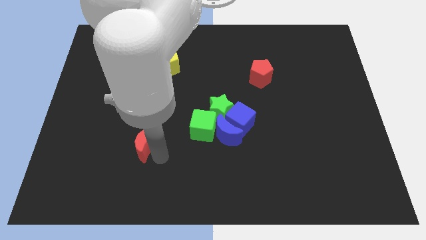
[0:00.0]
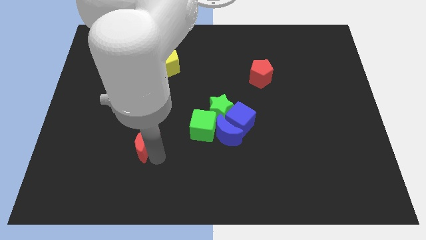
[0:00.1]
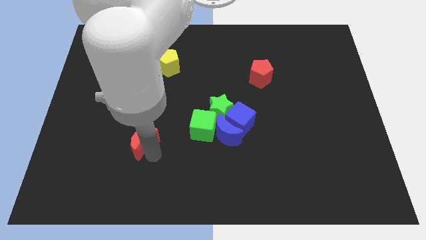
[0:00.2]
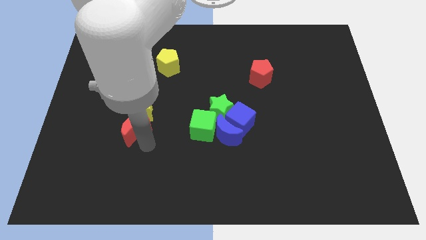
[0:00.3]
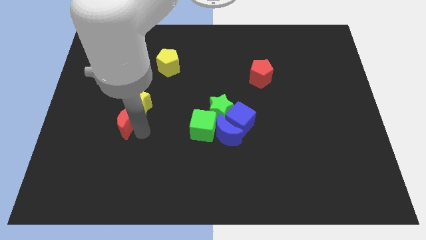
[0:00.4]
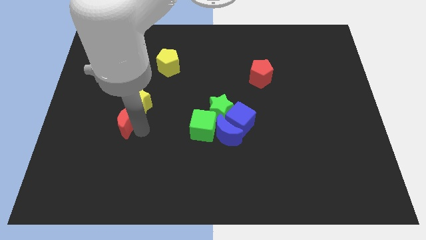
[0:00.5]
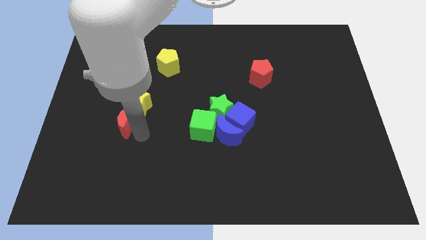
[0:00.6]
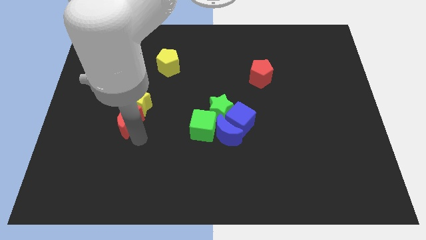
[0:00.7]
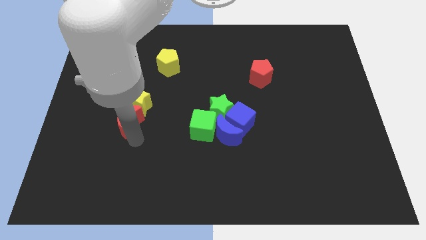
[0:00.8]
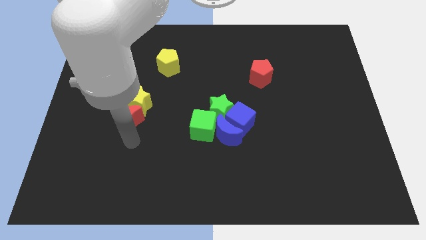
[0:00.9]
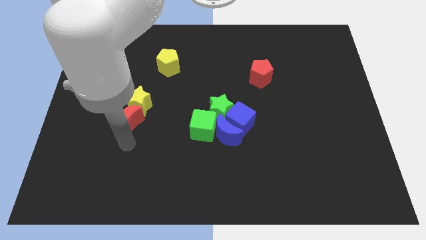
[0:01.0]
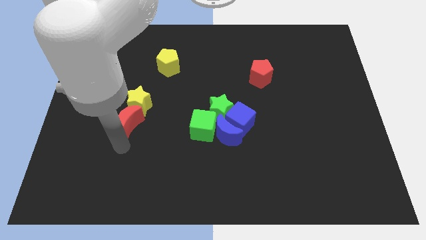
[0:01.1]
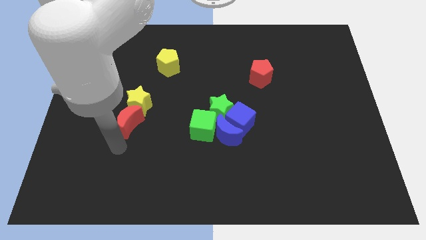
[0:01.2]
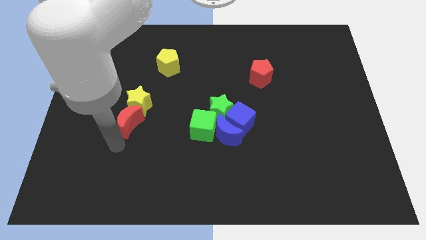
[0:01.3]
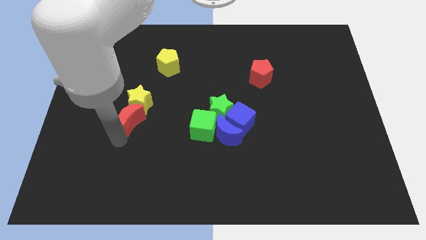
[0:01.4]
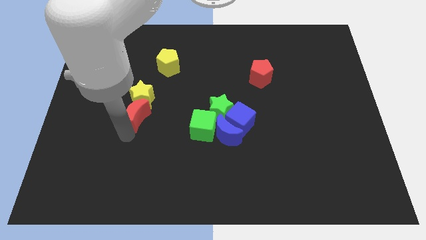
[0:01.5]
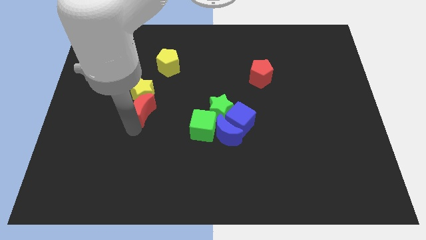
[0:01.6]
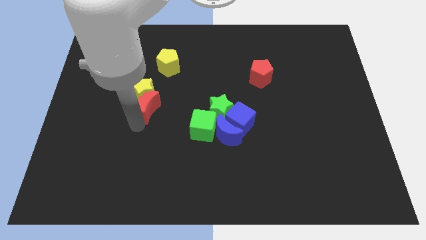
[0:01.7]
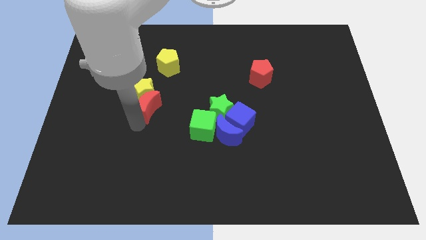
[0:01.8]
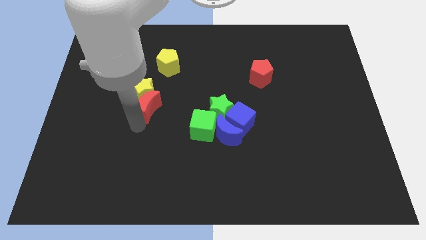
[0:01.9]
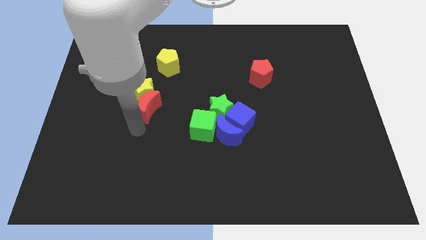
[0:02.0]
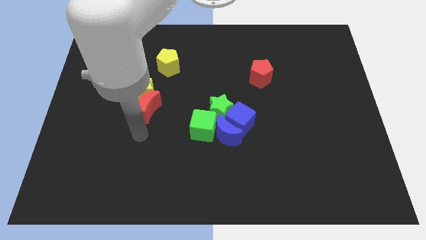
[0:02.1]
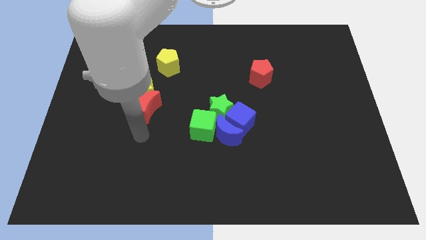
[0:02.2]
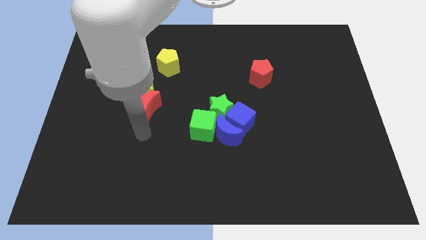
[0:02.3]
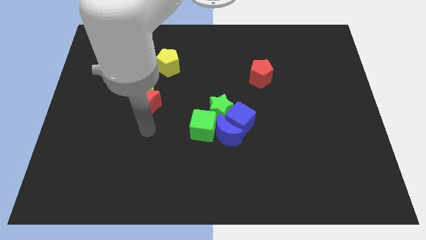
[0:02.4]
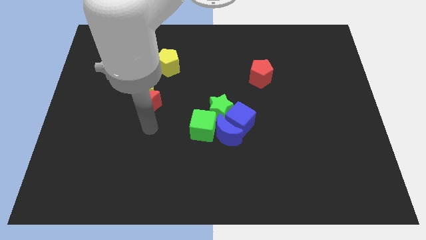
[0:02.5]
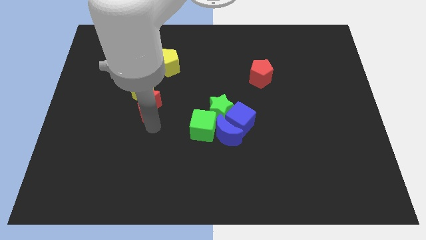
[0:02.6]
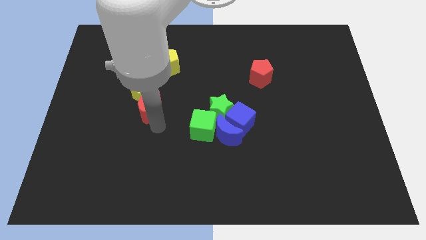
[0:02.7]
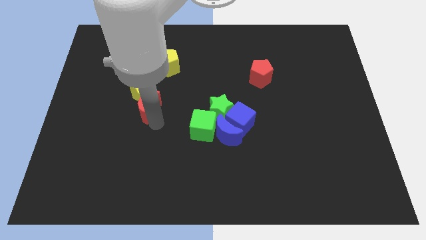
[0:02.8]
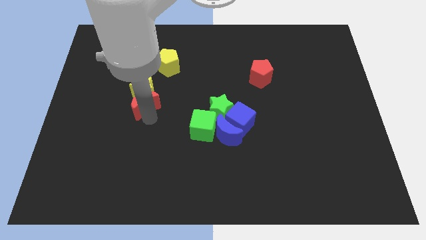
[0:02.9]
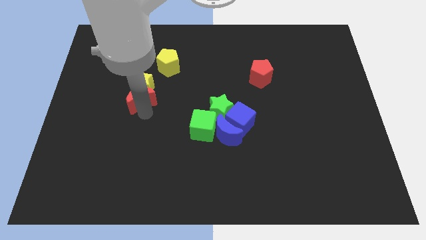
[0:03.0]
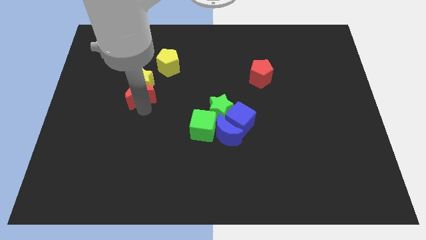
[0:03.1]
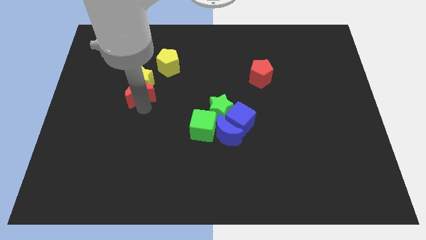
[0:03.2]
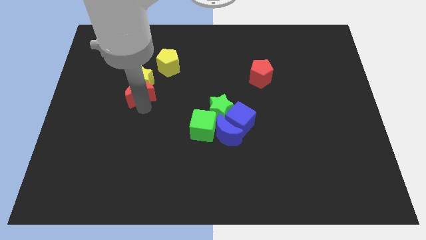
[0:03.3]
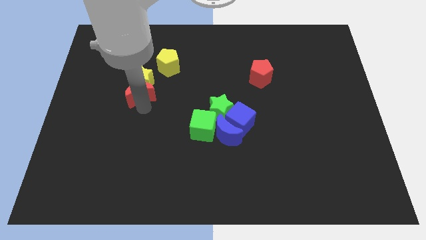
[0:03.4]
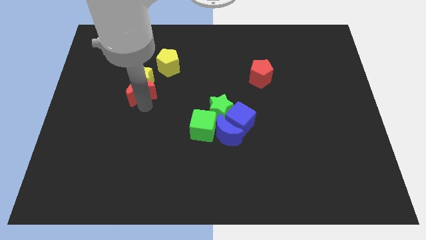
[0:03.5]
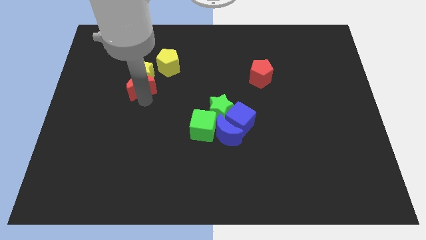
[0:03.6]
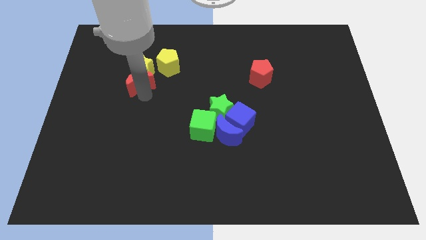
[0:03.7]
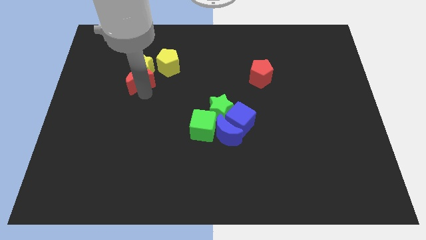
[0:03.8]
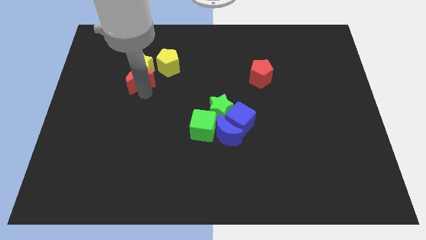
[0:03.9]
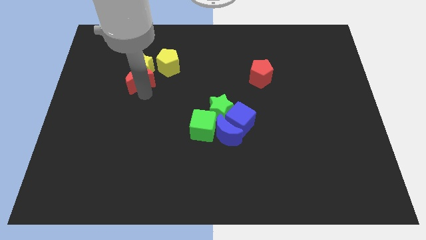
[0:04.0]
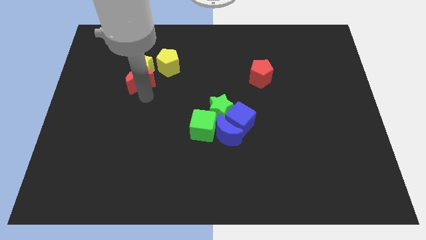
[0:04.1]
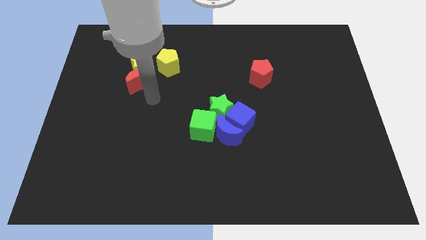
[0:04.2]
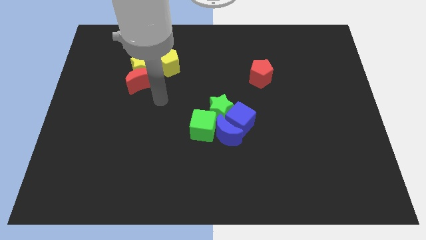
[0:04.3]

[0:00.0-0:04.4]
move the red crescent along with yellow star to the left of yellow pentagon

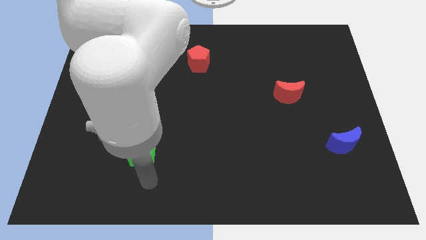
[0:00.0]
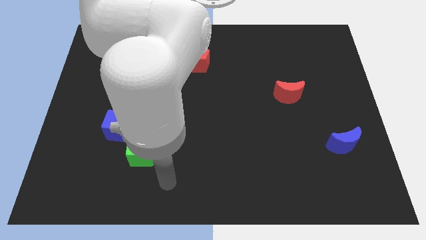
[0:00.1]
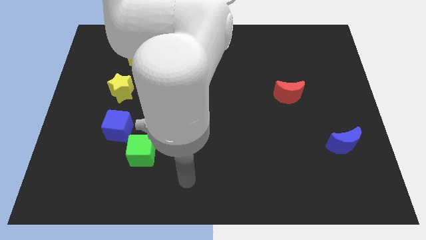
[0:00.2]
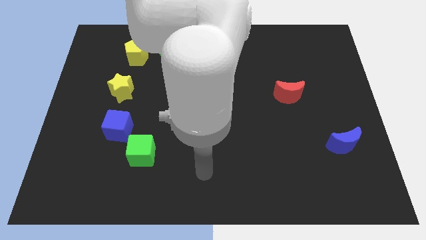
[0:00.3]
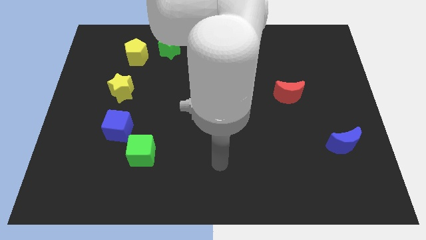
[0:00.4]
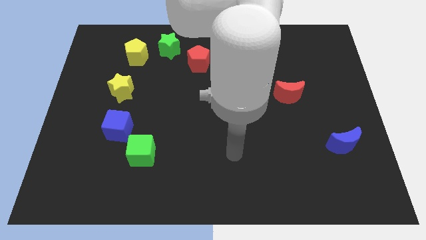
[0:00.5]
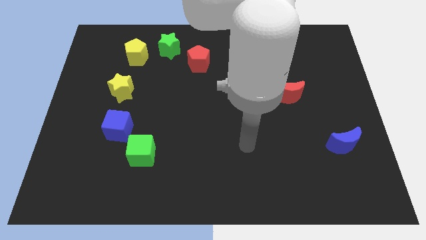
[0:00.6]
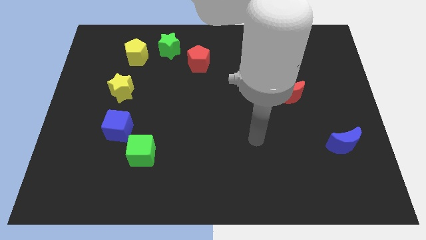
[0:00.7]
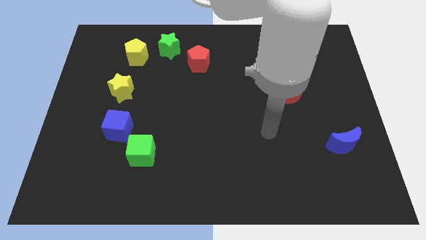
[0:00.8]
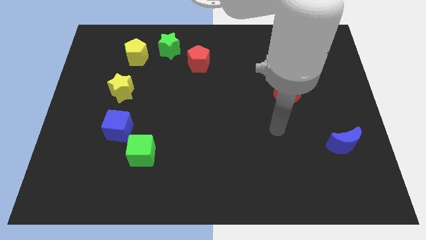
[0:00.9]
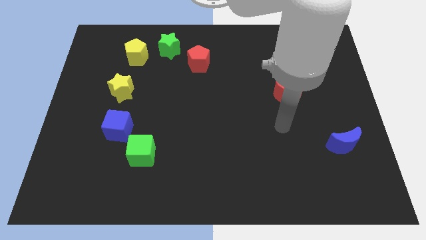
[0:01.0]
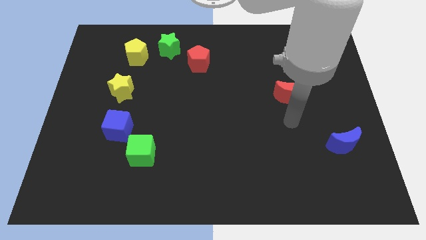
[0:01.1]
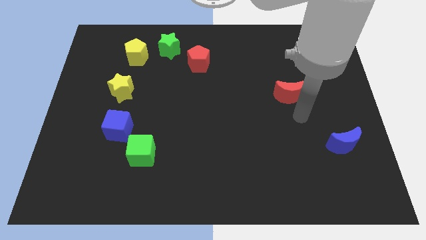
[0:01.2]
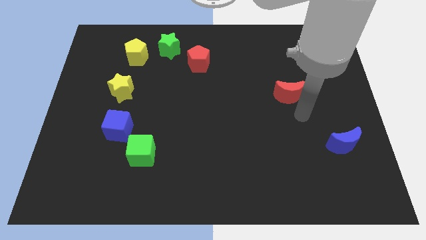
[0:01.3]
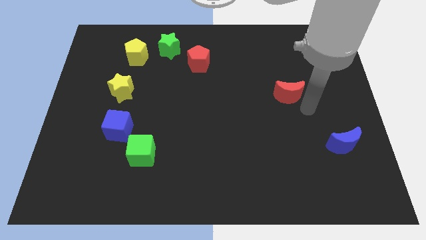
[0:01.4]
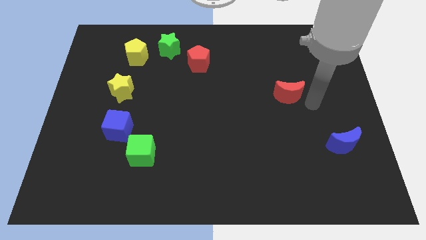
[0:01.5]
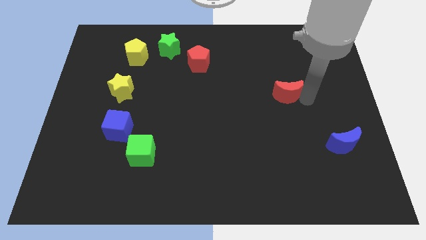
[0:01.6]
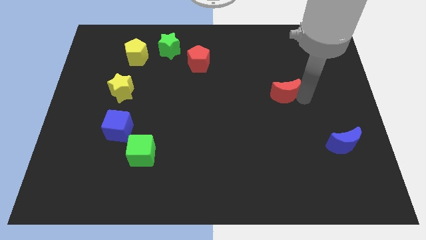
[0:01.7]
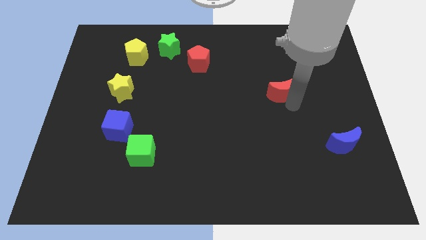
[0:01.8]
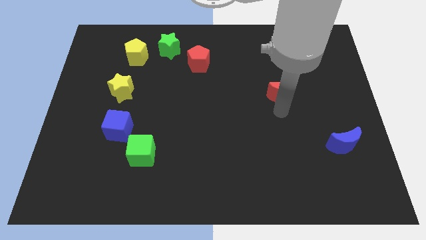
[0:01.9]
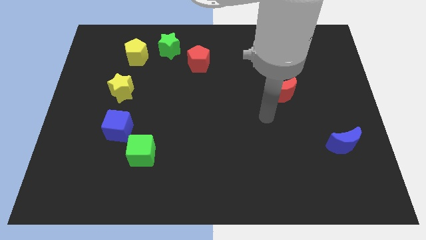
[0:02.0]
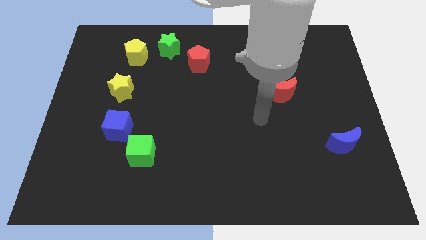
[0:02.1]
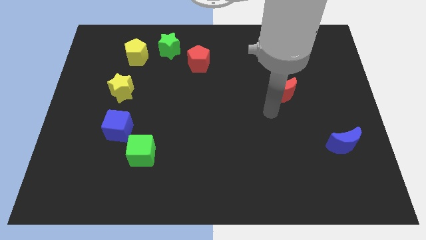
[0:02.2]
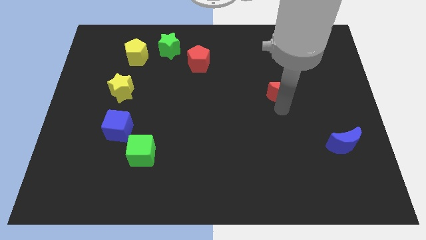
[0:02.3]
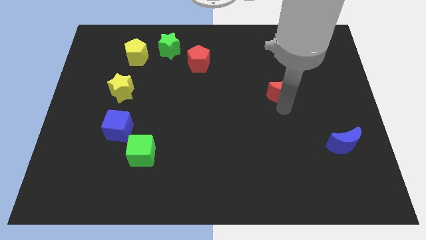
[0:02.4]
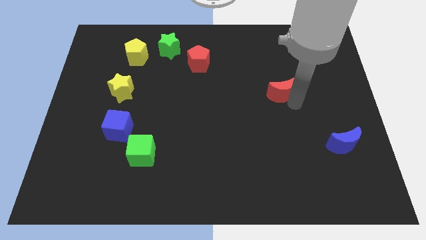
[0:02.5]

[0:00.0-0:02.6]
slightly push the red moon towards the top

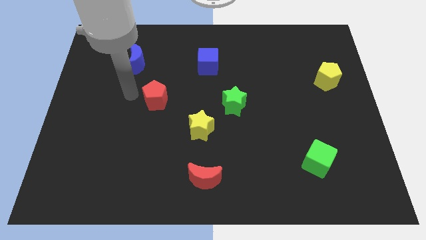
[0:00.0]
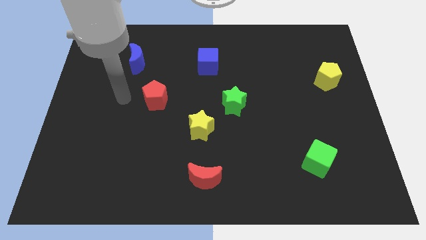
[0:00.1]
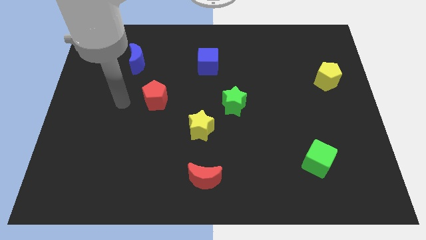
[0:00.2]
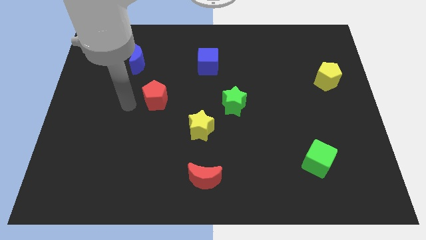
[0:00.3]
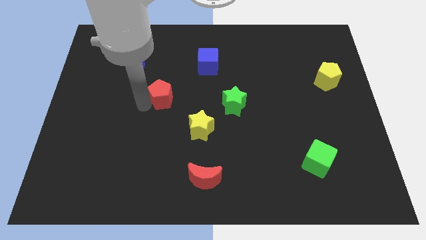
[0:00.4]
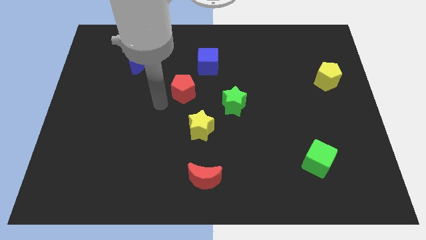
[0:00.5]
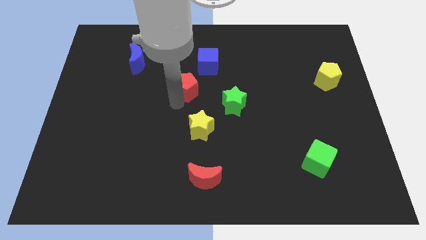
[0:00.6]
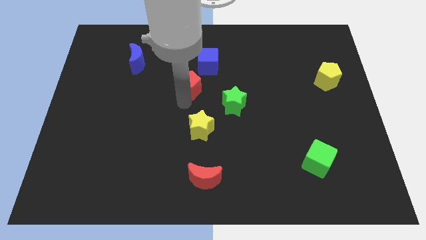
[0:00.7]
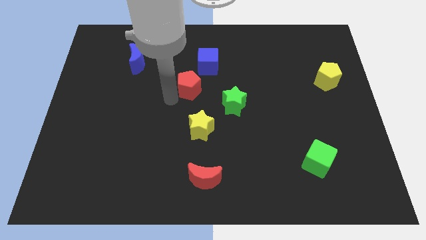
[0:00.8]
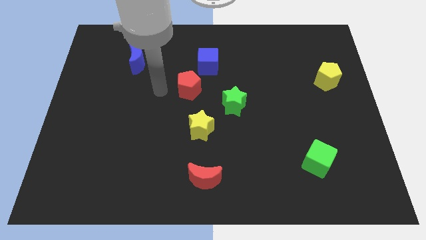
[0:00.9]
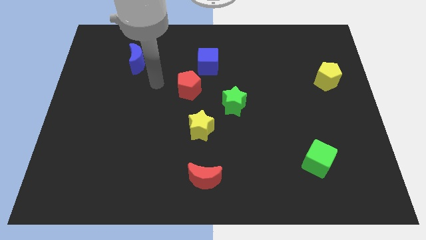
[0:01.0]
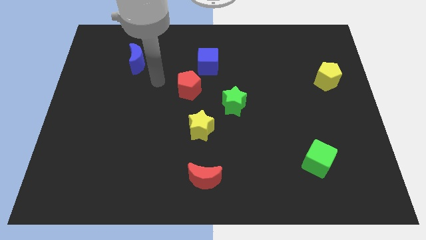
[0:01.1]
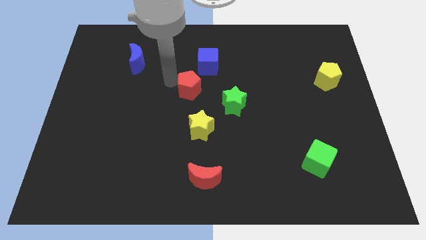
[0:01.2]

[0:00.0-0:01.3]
push the red pentagon to the bottom left side of the blue cube

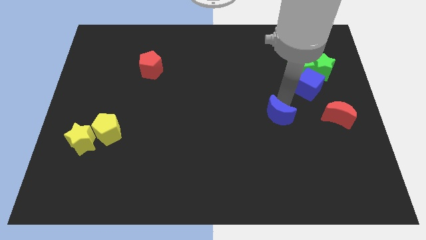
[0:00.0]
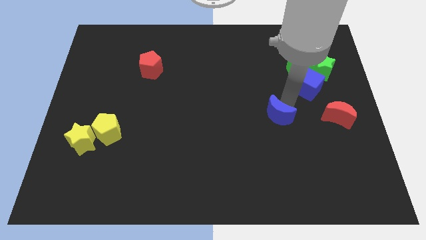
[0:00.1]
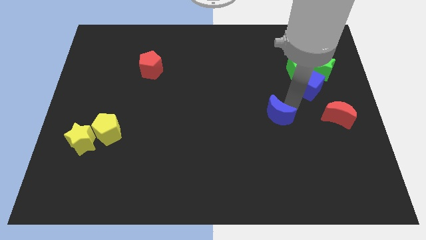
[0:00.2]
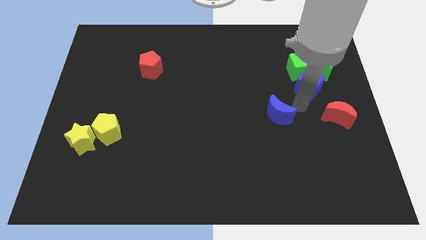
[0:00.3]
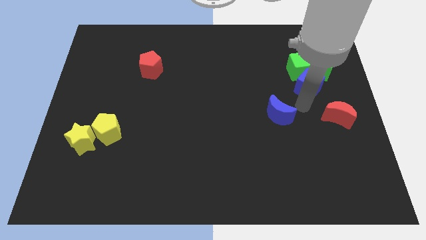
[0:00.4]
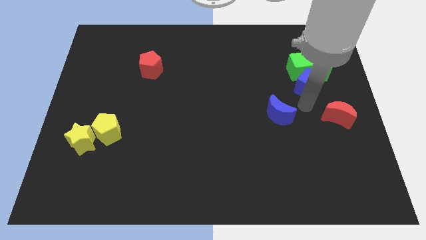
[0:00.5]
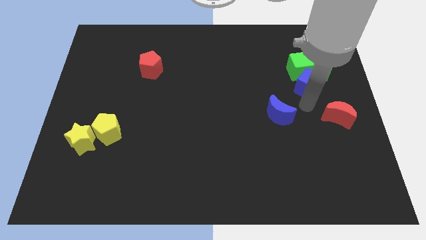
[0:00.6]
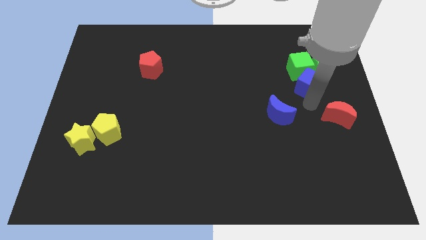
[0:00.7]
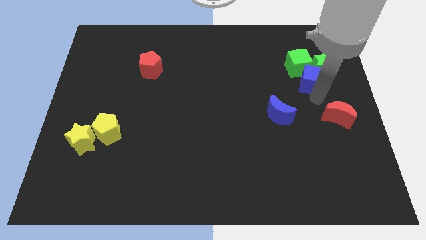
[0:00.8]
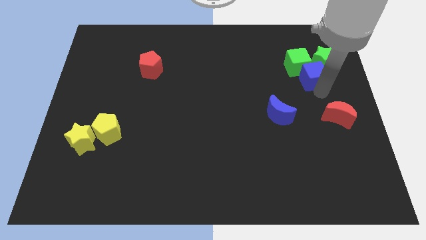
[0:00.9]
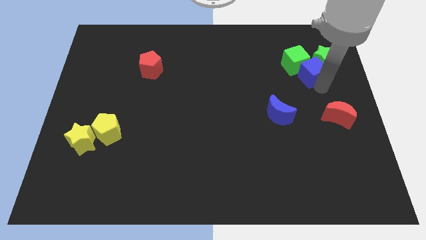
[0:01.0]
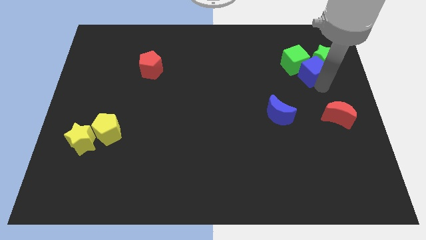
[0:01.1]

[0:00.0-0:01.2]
push blue cube into green blocks
